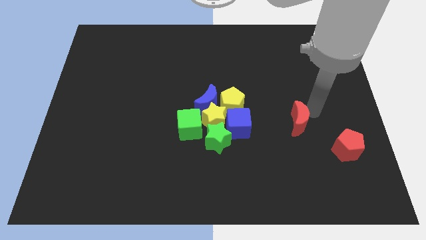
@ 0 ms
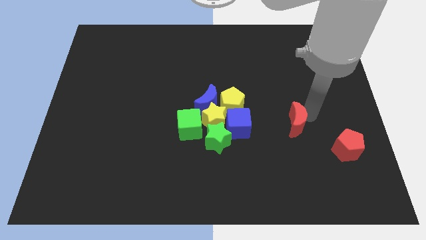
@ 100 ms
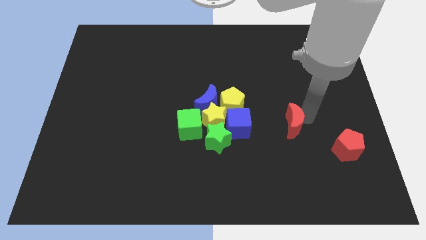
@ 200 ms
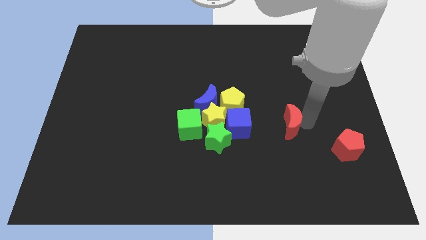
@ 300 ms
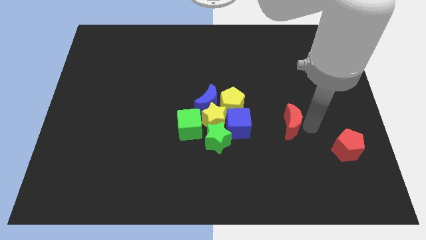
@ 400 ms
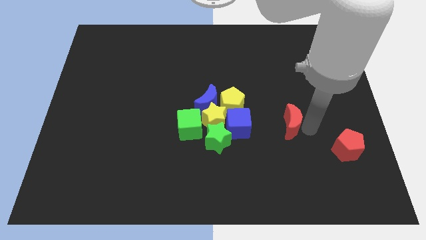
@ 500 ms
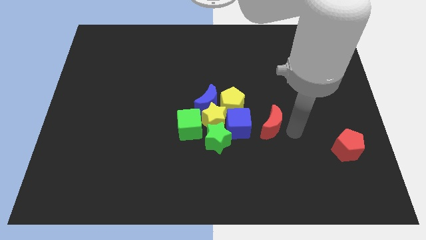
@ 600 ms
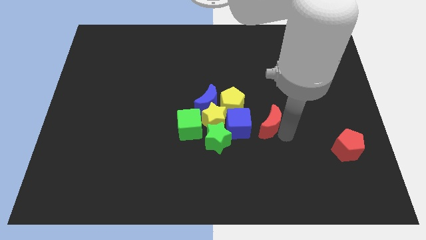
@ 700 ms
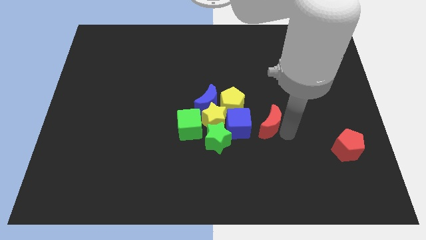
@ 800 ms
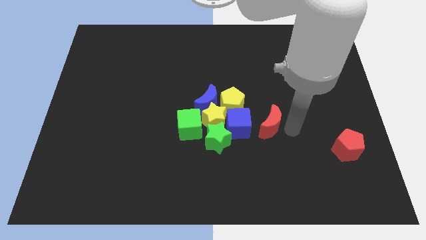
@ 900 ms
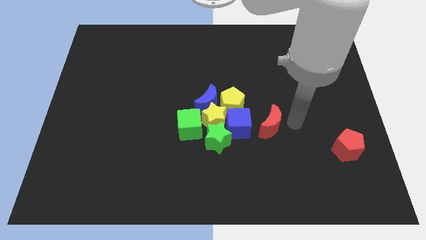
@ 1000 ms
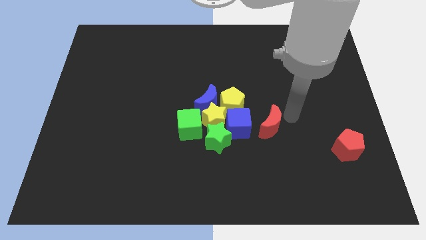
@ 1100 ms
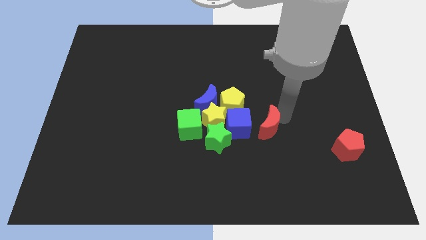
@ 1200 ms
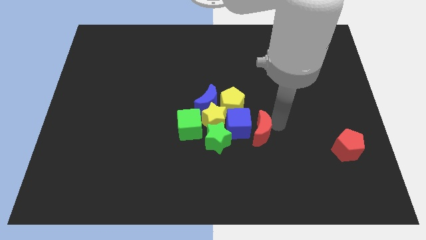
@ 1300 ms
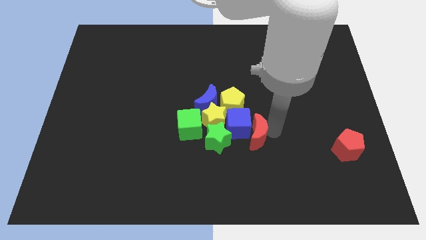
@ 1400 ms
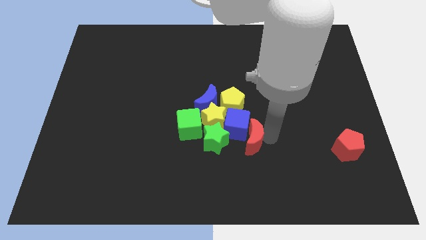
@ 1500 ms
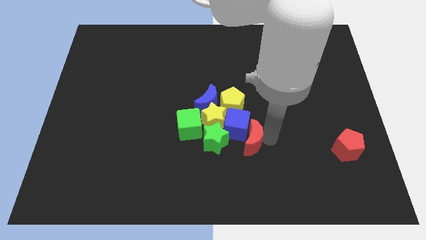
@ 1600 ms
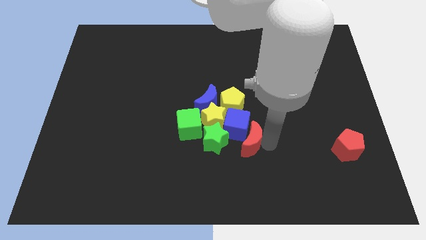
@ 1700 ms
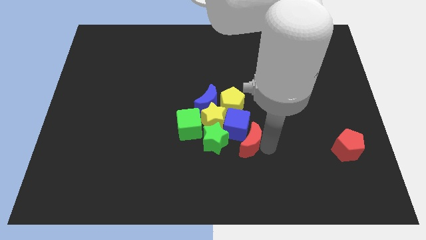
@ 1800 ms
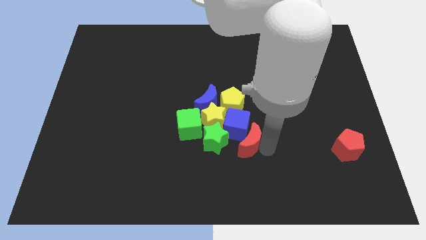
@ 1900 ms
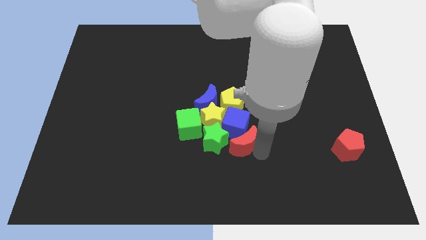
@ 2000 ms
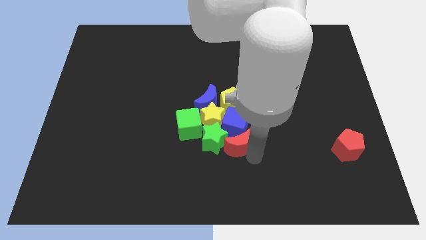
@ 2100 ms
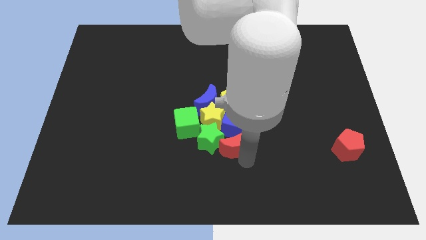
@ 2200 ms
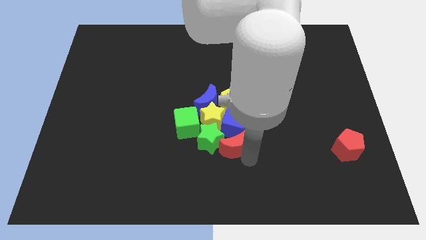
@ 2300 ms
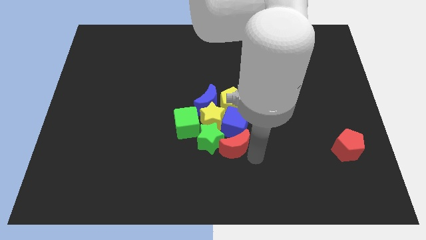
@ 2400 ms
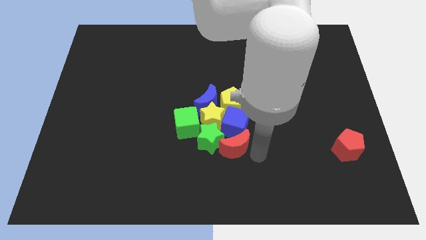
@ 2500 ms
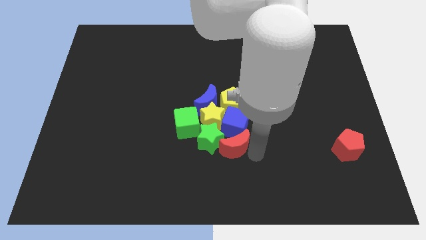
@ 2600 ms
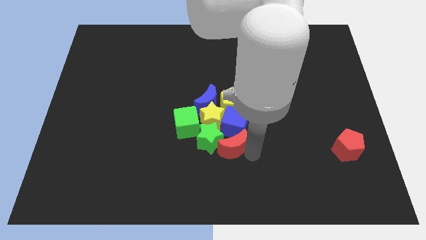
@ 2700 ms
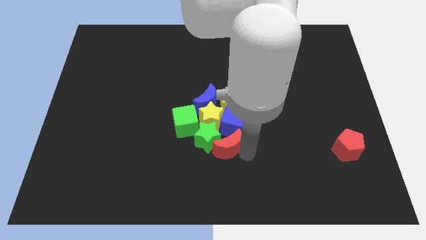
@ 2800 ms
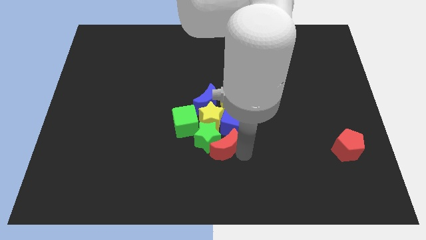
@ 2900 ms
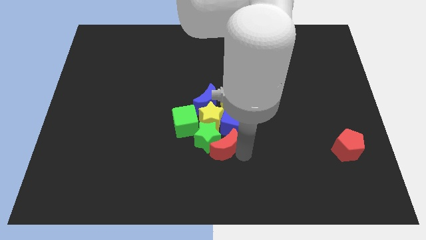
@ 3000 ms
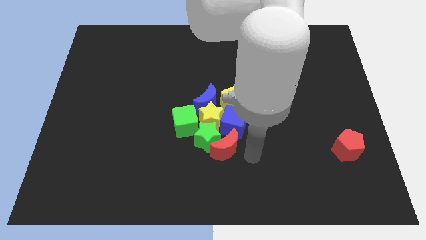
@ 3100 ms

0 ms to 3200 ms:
move the red crescent to the right of the green star

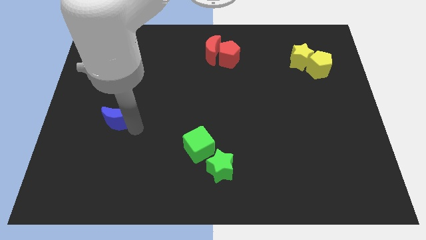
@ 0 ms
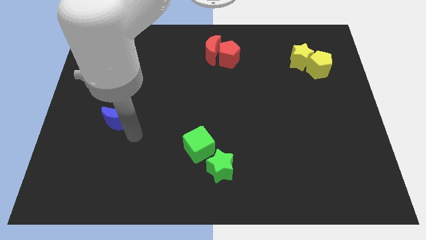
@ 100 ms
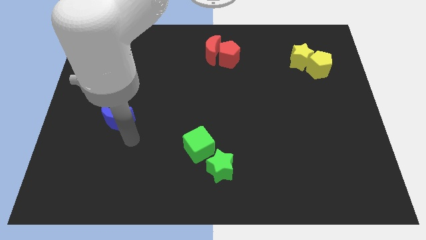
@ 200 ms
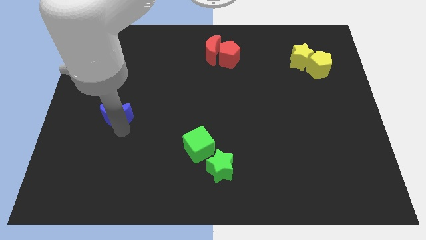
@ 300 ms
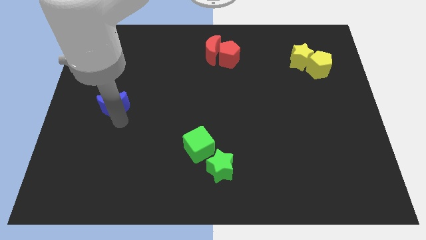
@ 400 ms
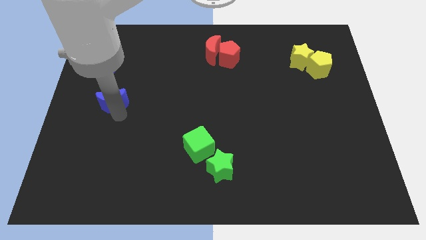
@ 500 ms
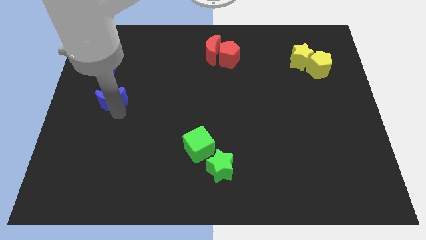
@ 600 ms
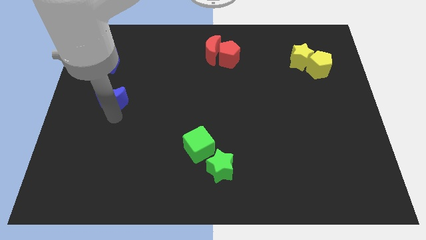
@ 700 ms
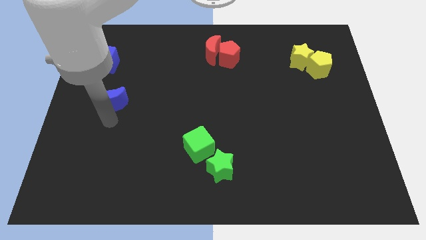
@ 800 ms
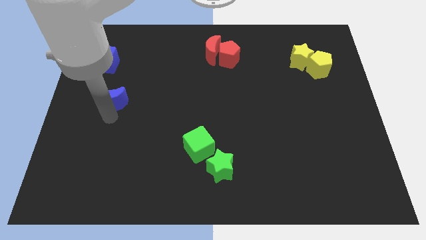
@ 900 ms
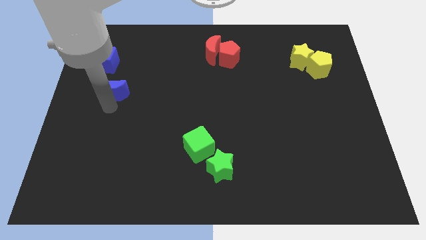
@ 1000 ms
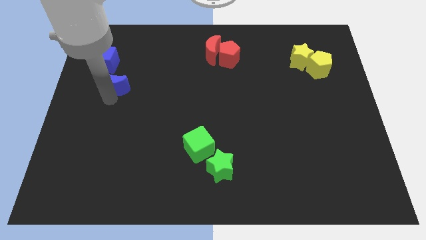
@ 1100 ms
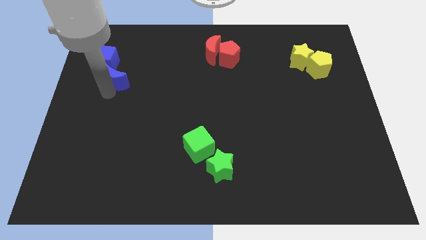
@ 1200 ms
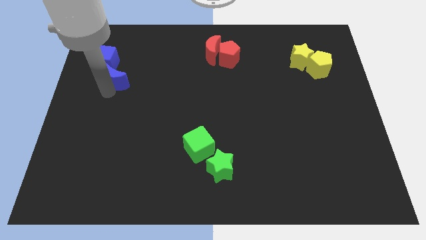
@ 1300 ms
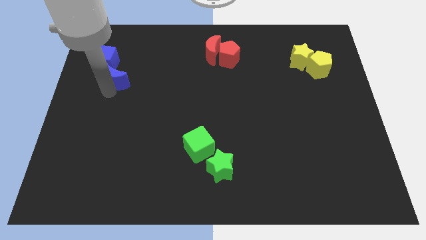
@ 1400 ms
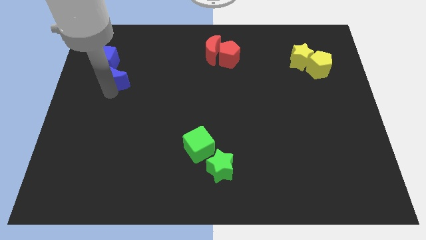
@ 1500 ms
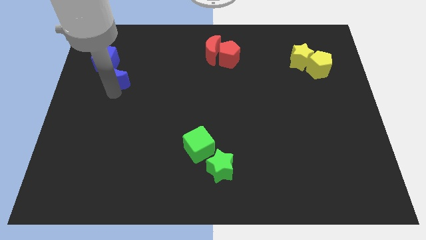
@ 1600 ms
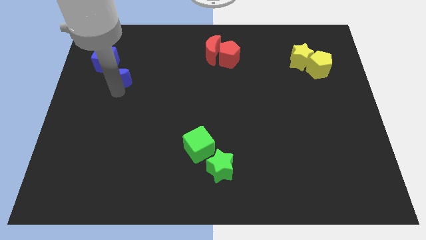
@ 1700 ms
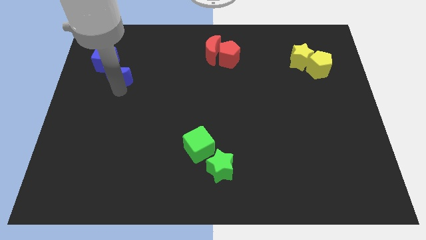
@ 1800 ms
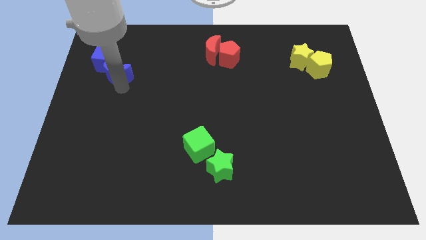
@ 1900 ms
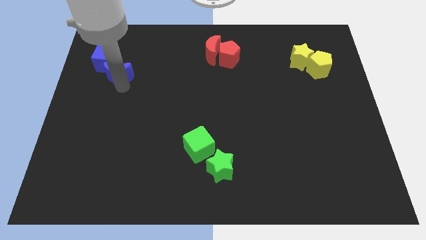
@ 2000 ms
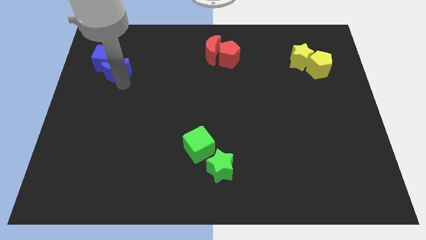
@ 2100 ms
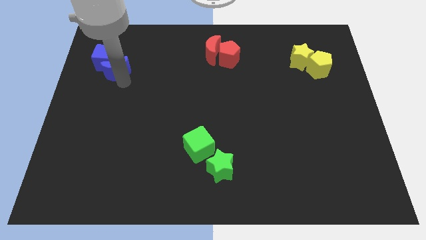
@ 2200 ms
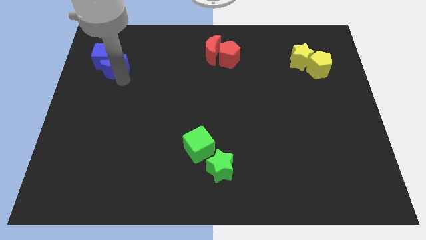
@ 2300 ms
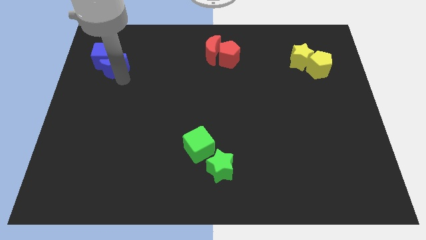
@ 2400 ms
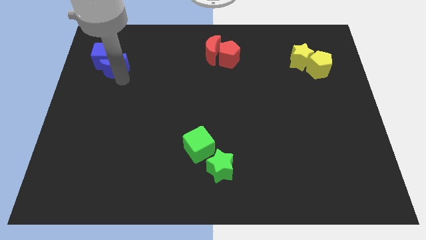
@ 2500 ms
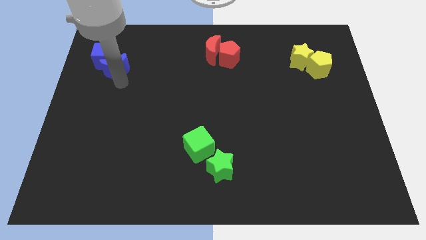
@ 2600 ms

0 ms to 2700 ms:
push the blue moon into blue cube

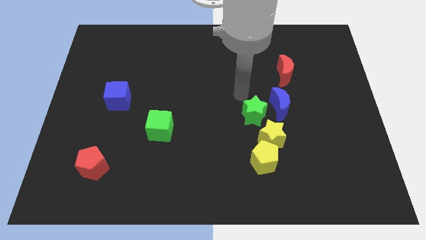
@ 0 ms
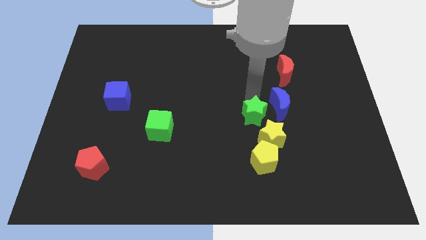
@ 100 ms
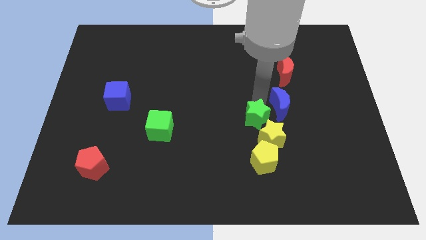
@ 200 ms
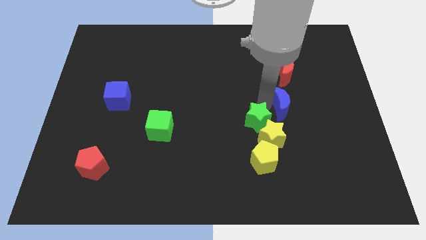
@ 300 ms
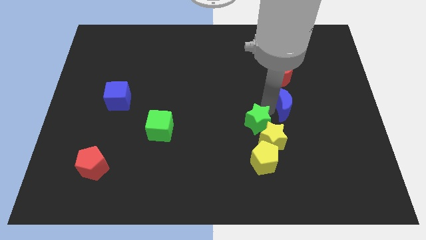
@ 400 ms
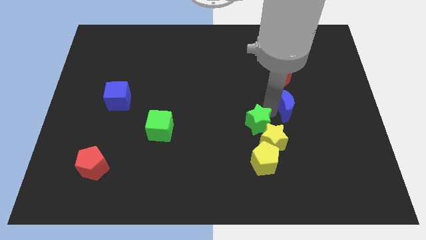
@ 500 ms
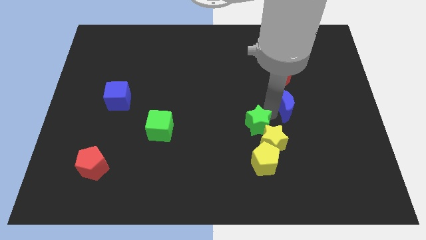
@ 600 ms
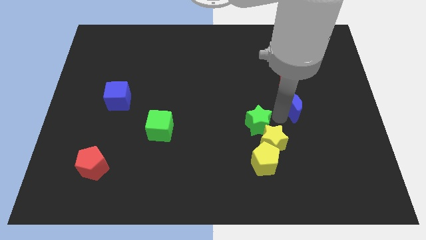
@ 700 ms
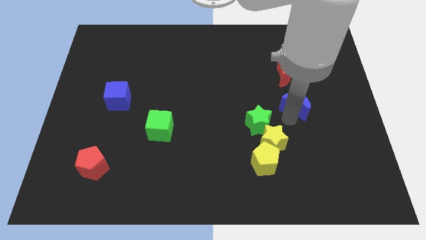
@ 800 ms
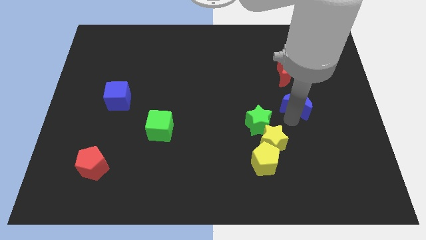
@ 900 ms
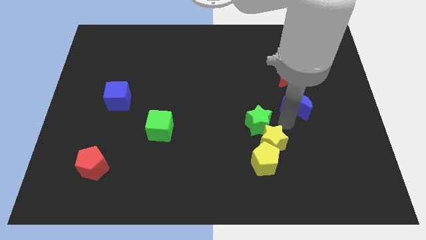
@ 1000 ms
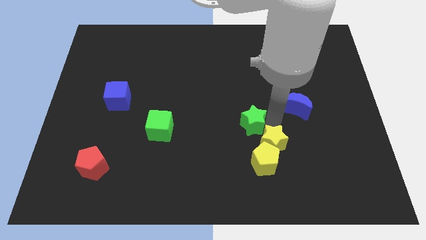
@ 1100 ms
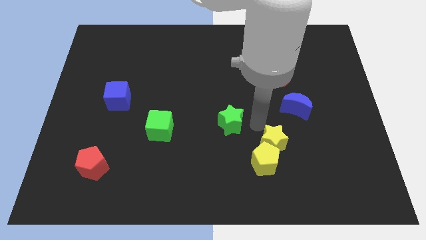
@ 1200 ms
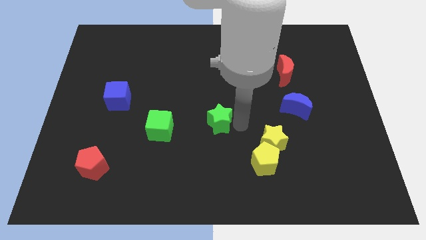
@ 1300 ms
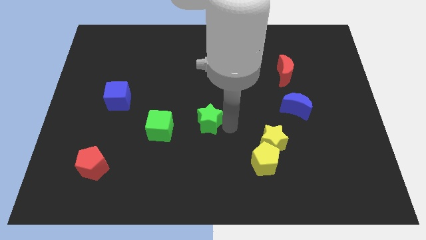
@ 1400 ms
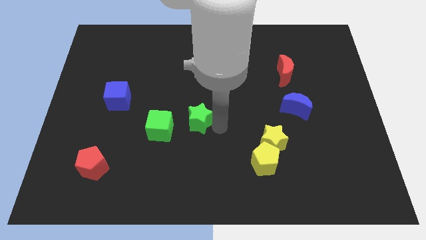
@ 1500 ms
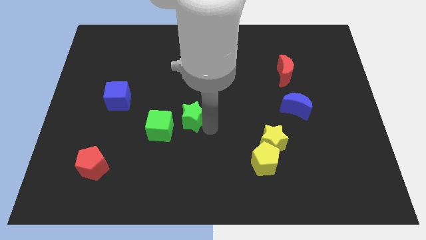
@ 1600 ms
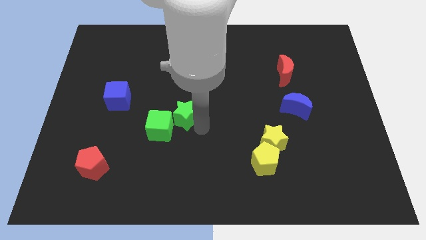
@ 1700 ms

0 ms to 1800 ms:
push the green star into the green cube

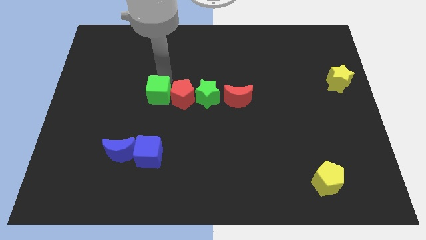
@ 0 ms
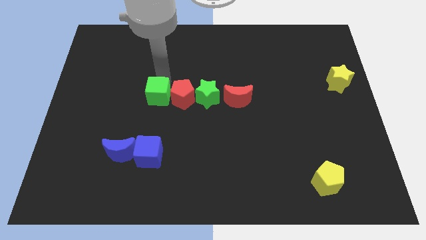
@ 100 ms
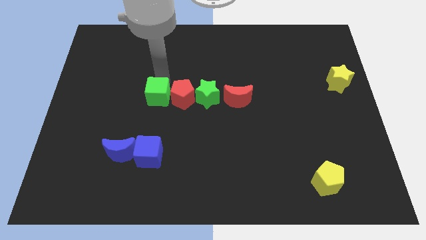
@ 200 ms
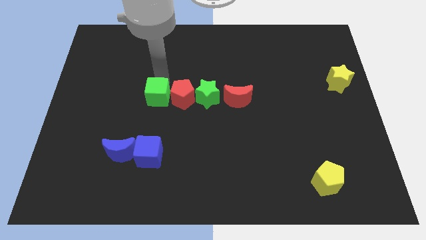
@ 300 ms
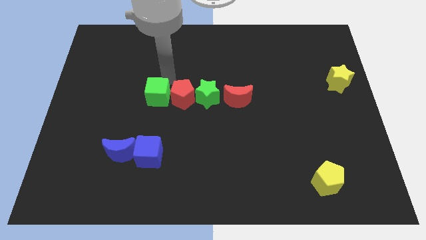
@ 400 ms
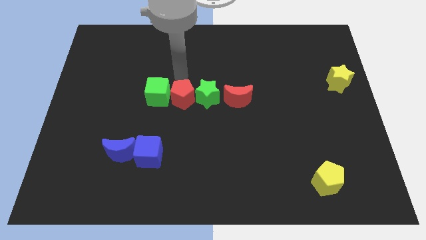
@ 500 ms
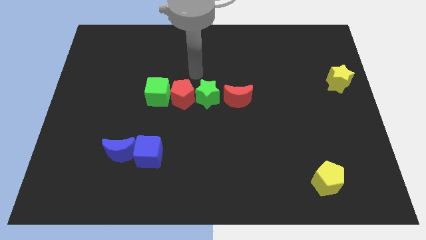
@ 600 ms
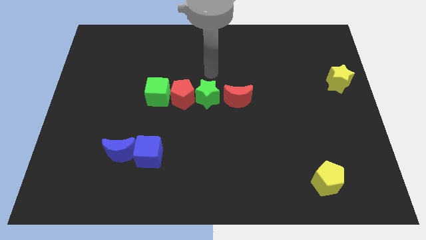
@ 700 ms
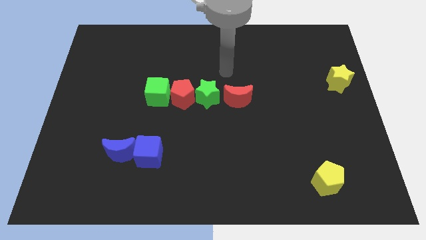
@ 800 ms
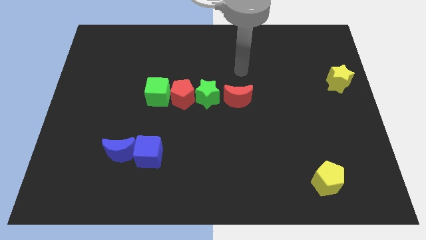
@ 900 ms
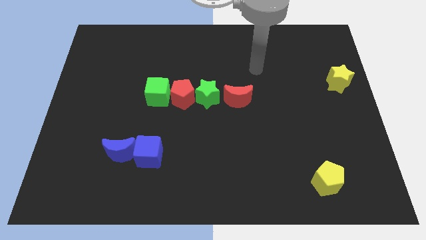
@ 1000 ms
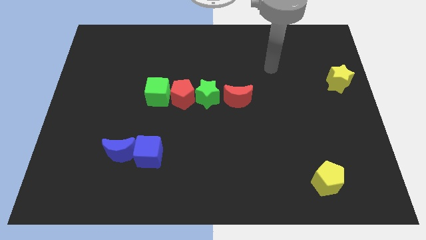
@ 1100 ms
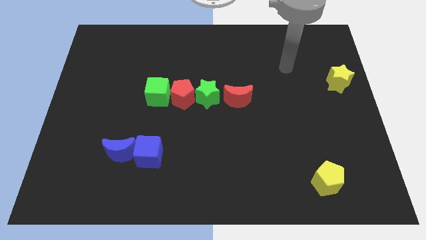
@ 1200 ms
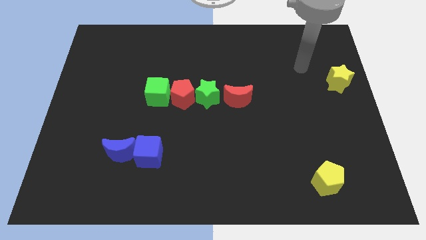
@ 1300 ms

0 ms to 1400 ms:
move your arm away from the green cube
